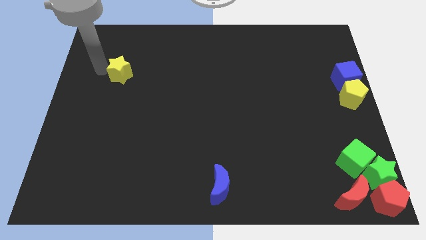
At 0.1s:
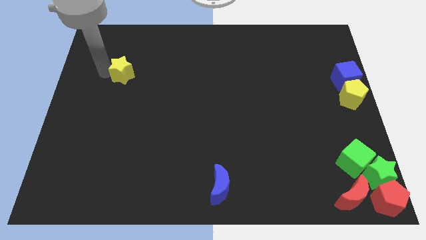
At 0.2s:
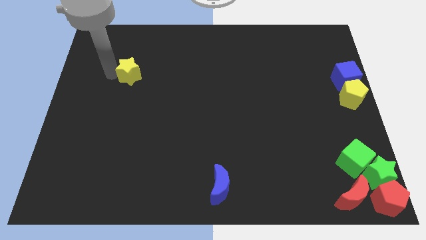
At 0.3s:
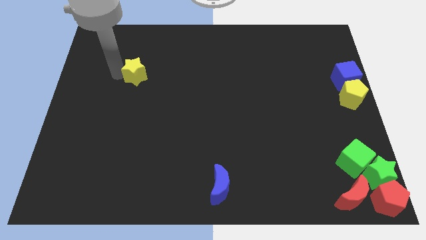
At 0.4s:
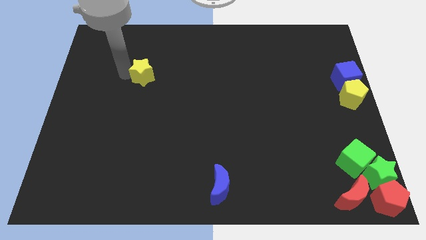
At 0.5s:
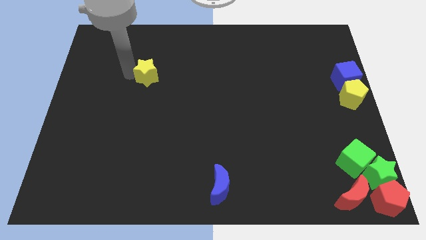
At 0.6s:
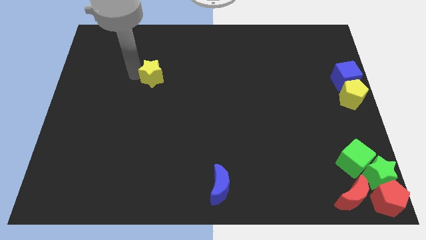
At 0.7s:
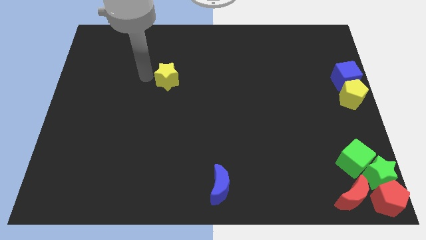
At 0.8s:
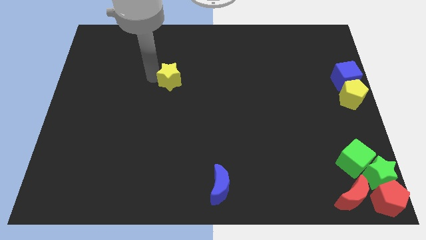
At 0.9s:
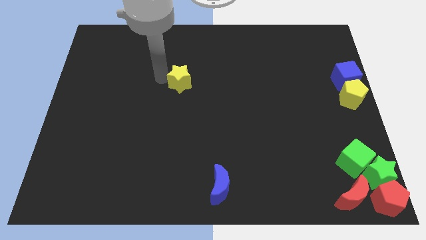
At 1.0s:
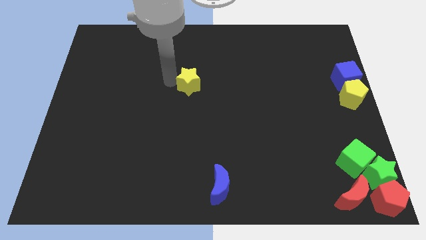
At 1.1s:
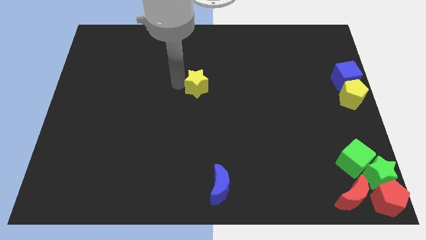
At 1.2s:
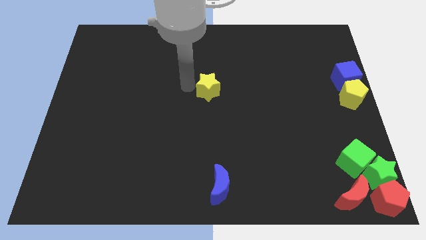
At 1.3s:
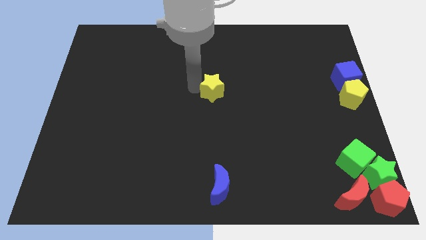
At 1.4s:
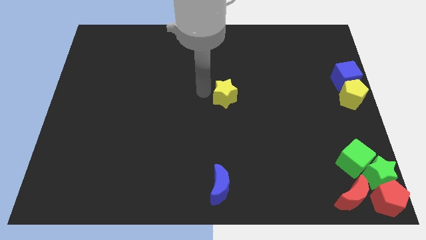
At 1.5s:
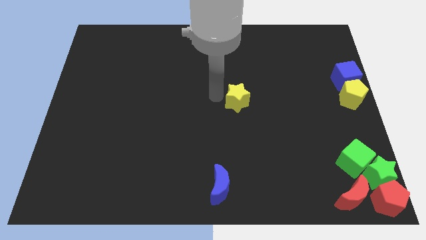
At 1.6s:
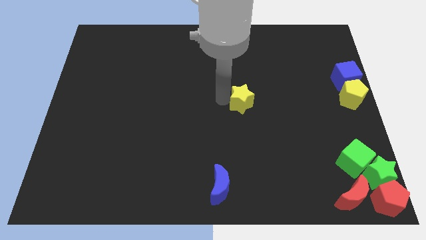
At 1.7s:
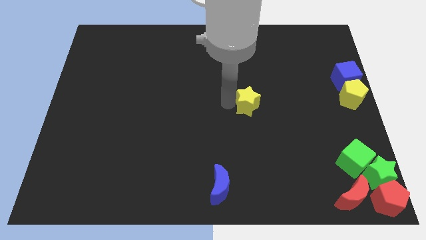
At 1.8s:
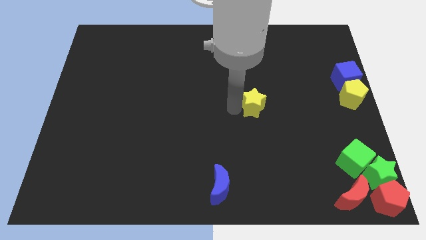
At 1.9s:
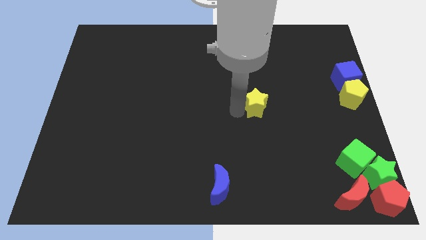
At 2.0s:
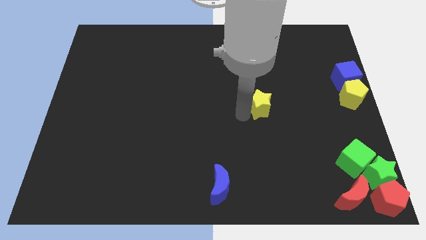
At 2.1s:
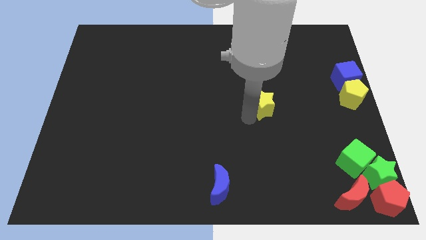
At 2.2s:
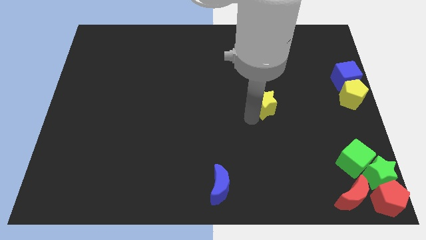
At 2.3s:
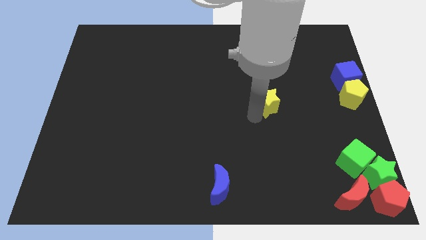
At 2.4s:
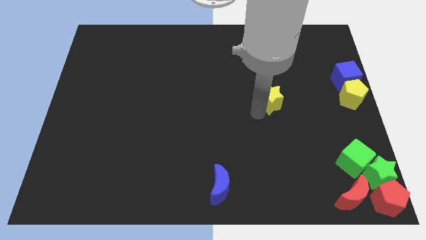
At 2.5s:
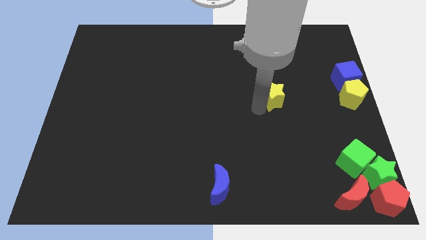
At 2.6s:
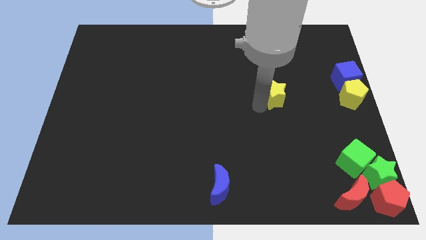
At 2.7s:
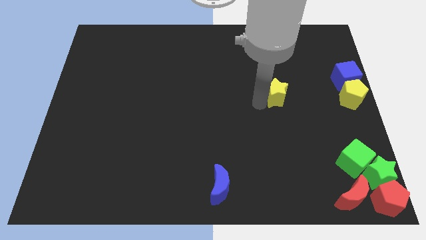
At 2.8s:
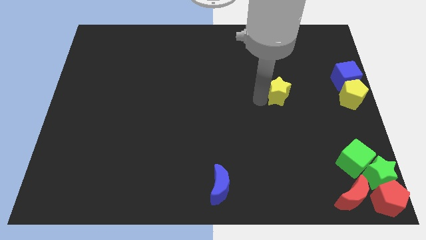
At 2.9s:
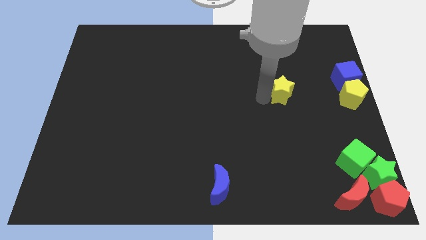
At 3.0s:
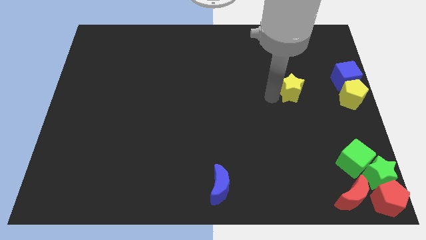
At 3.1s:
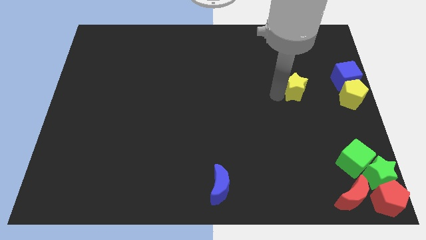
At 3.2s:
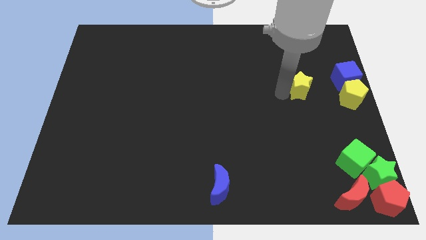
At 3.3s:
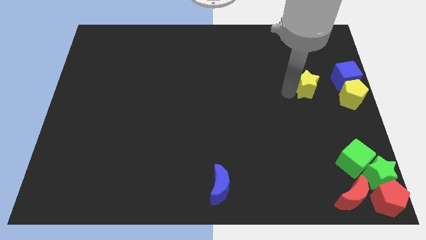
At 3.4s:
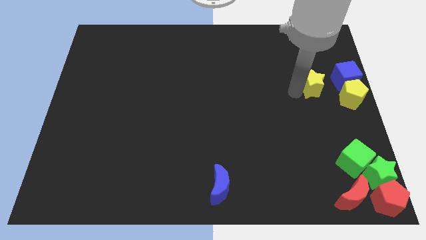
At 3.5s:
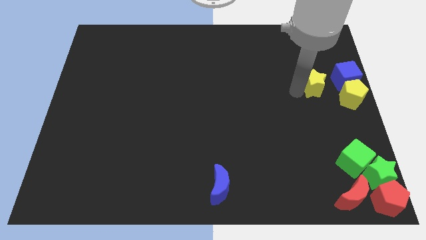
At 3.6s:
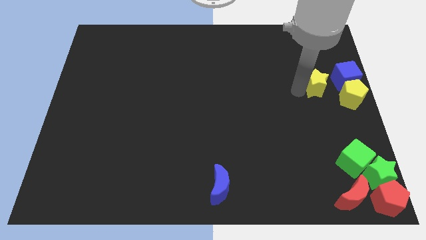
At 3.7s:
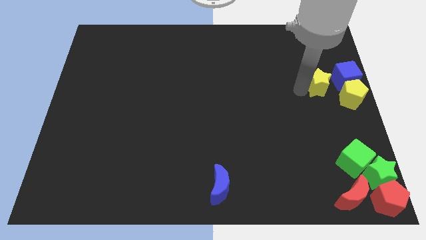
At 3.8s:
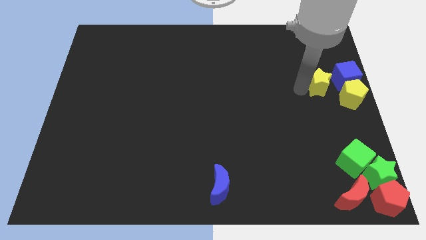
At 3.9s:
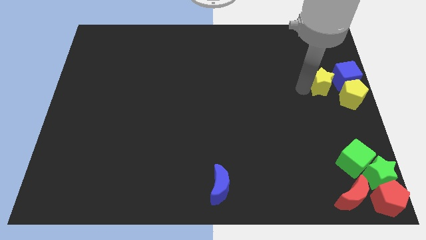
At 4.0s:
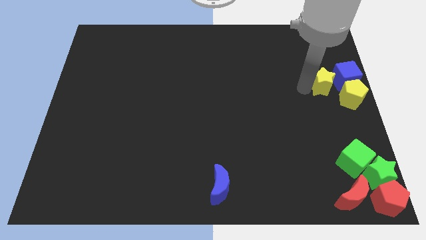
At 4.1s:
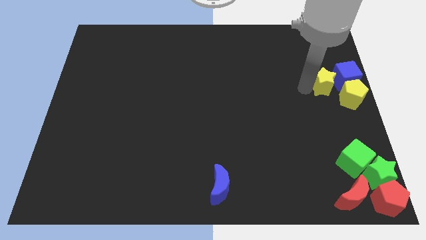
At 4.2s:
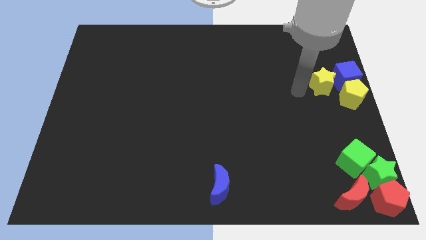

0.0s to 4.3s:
push the yellow star towards the left of the blue cube

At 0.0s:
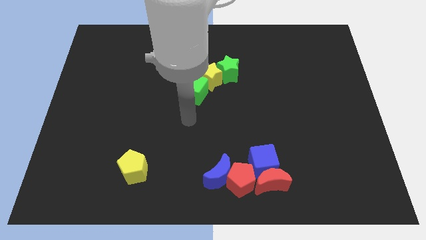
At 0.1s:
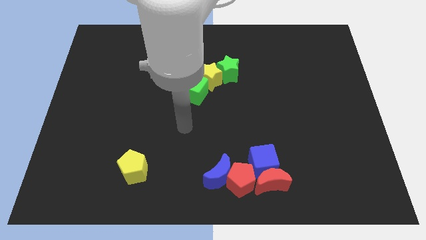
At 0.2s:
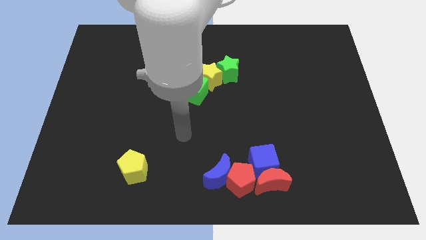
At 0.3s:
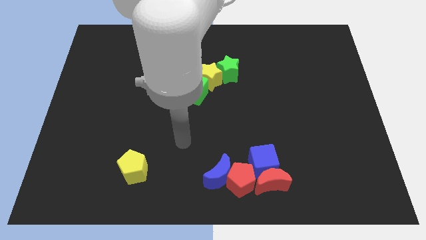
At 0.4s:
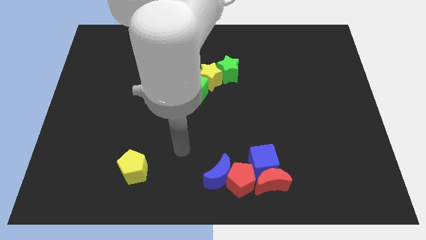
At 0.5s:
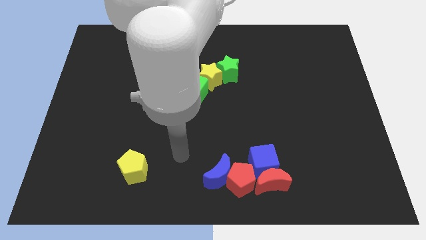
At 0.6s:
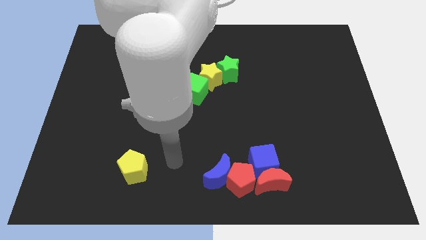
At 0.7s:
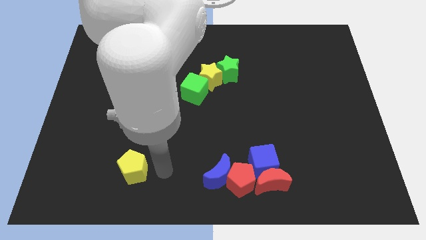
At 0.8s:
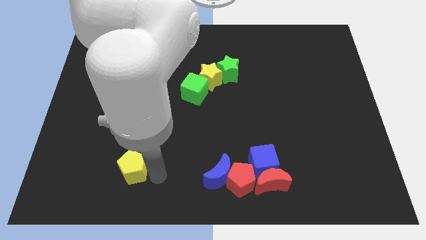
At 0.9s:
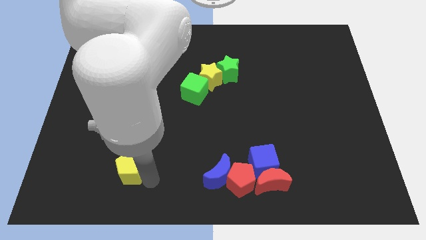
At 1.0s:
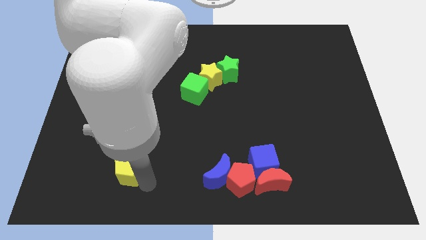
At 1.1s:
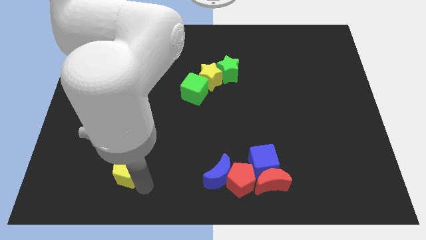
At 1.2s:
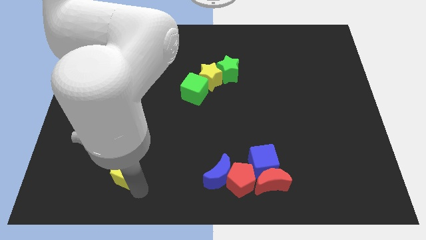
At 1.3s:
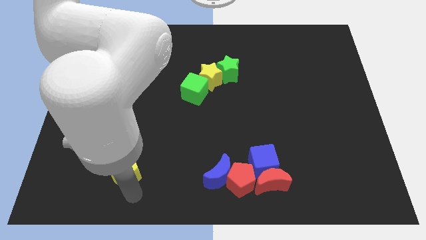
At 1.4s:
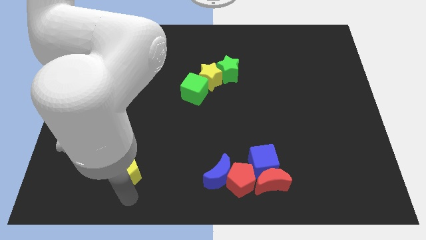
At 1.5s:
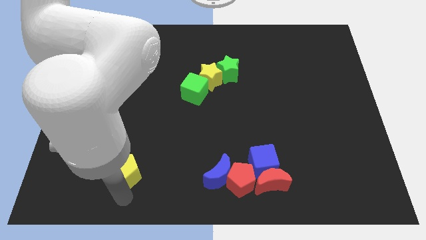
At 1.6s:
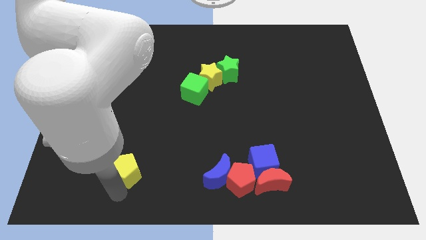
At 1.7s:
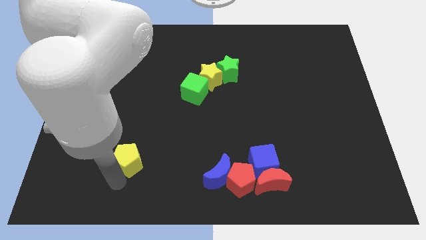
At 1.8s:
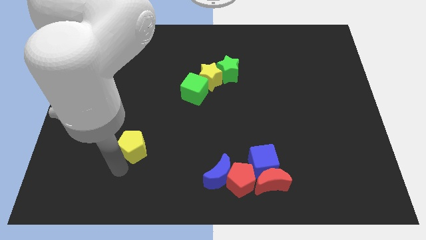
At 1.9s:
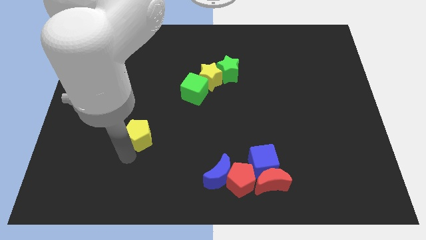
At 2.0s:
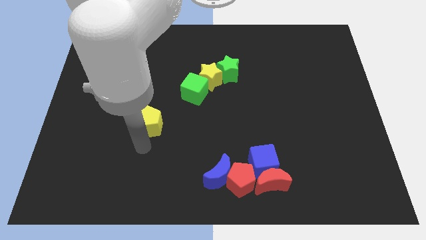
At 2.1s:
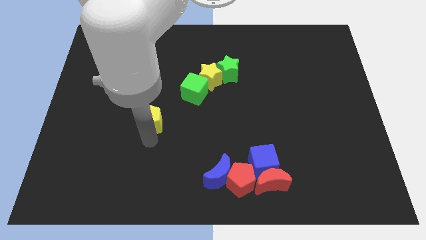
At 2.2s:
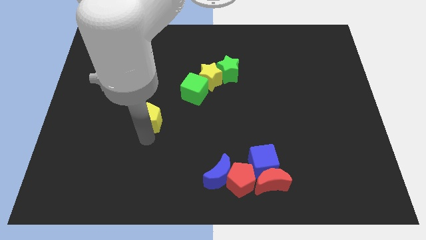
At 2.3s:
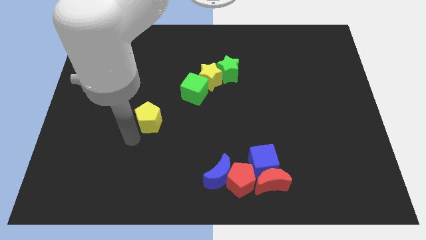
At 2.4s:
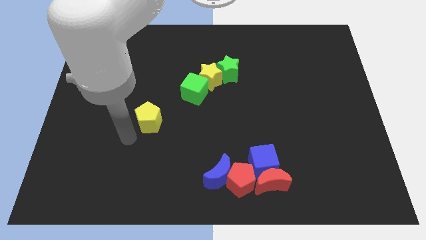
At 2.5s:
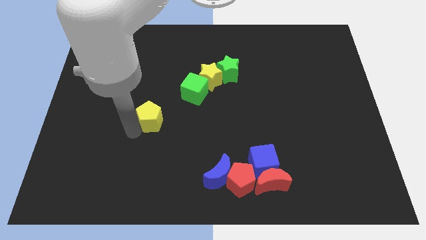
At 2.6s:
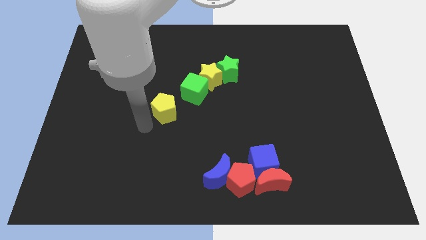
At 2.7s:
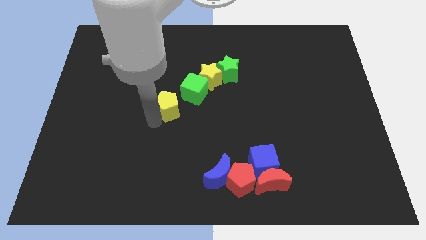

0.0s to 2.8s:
push the yellow pentagon towards the green cube

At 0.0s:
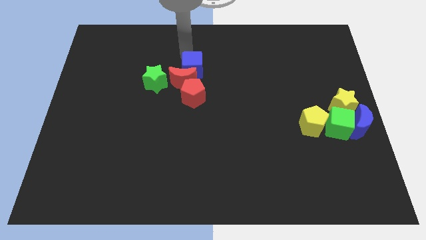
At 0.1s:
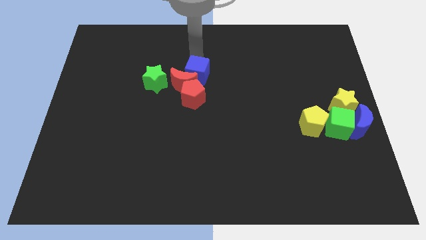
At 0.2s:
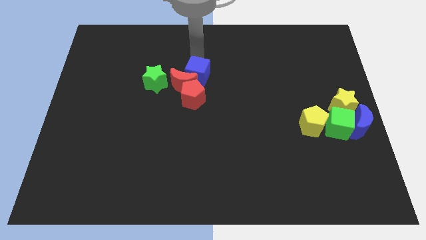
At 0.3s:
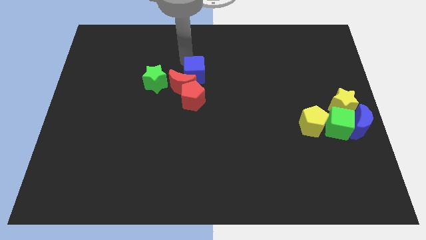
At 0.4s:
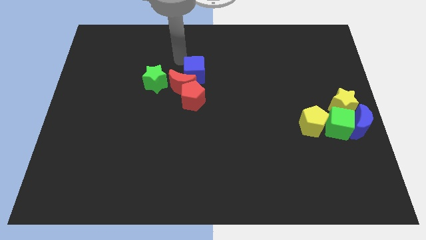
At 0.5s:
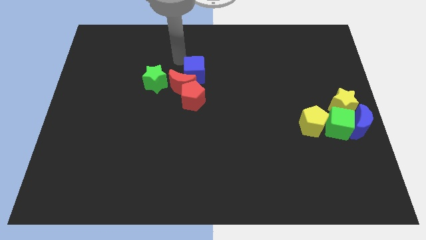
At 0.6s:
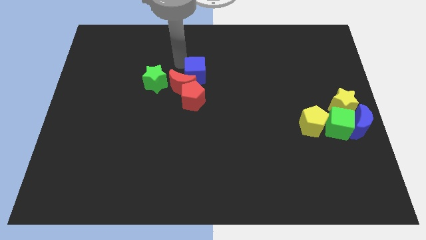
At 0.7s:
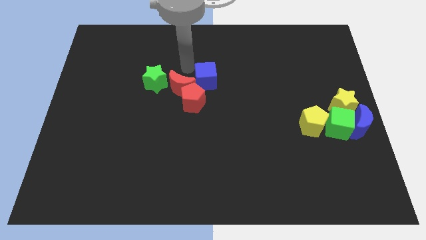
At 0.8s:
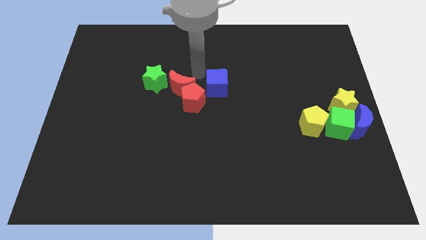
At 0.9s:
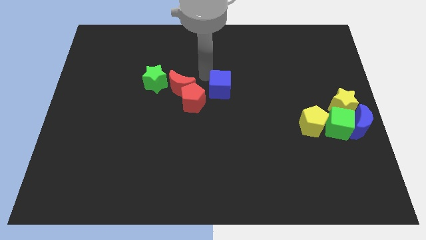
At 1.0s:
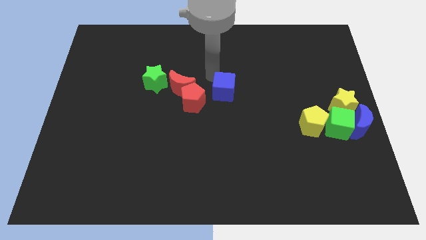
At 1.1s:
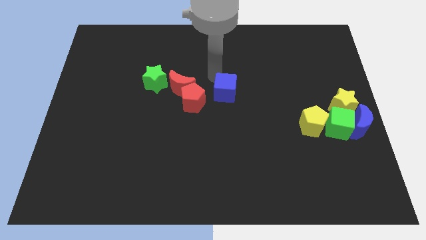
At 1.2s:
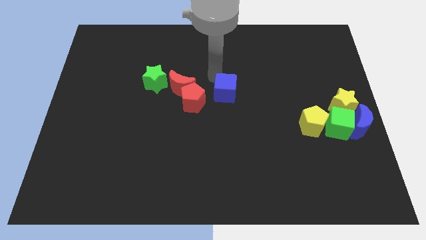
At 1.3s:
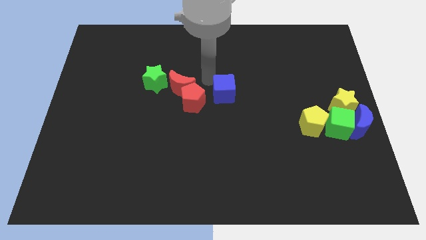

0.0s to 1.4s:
separate the blue cube from the group of blocks

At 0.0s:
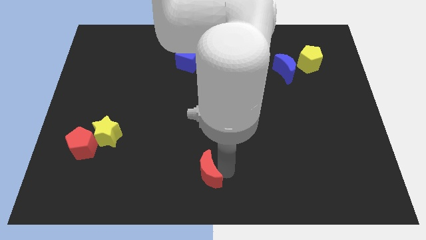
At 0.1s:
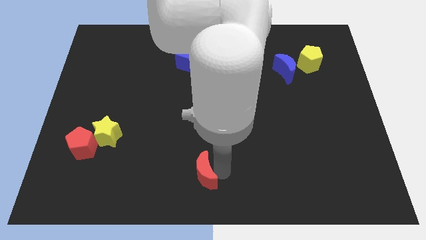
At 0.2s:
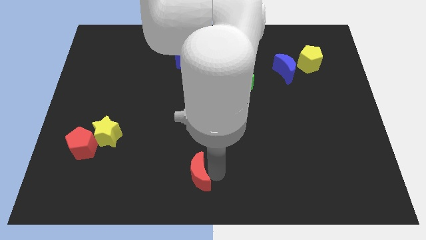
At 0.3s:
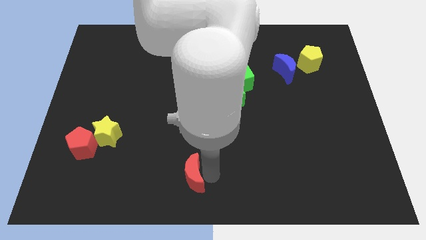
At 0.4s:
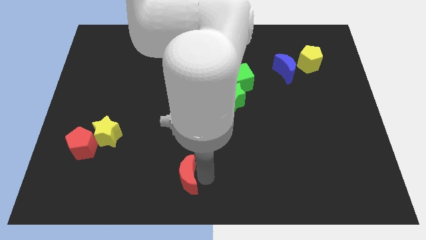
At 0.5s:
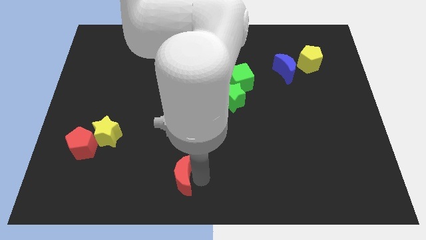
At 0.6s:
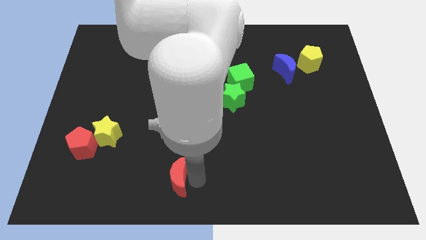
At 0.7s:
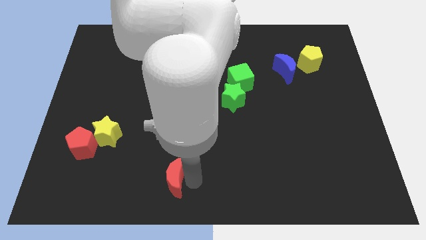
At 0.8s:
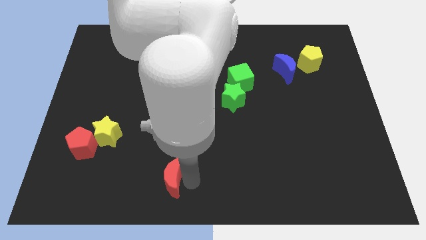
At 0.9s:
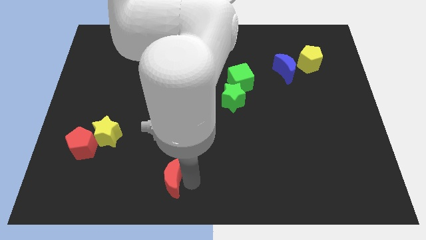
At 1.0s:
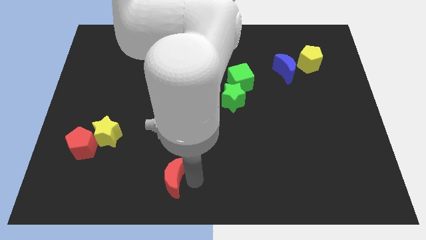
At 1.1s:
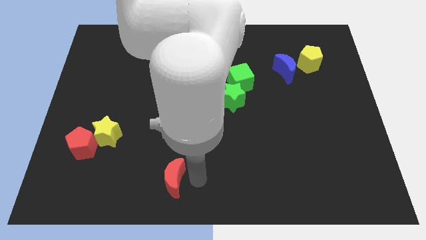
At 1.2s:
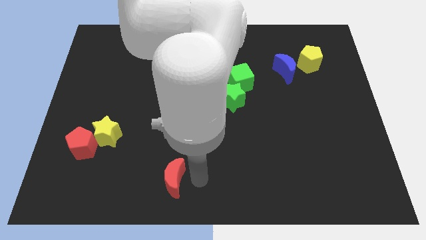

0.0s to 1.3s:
move the red crescent left side of the board
